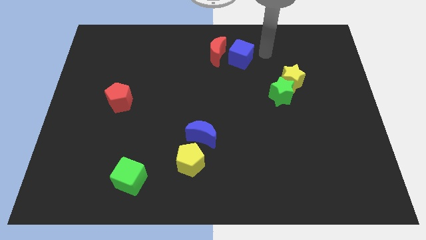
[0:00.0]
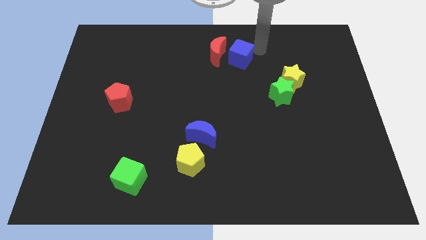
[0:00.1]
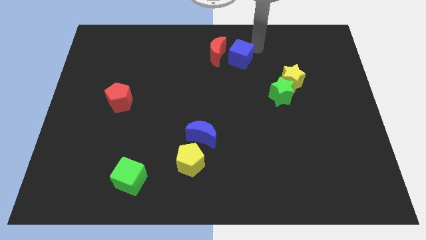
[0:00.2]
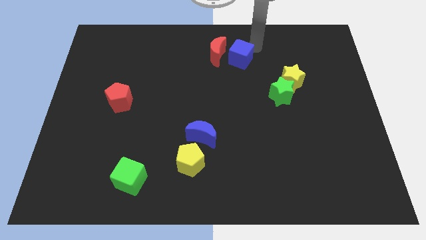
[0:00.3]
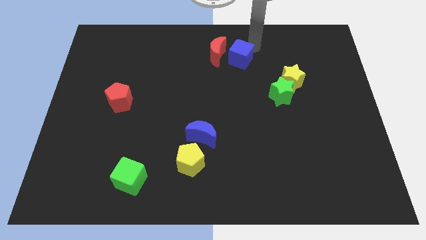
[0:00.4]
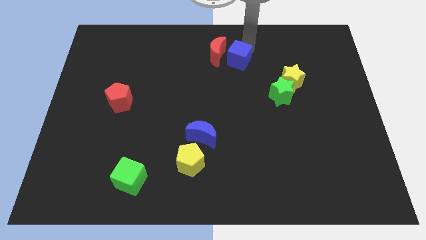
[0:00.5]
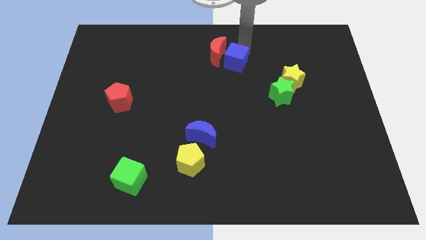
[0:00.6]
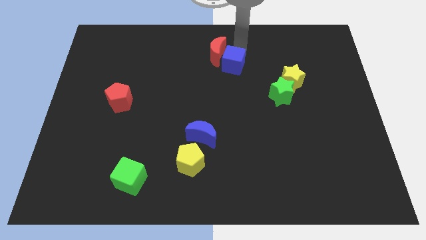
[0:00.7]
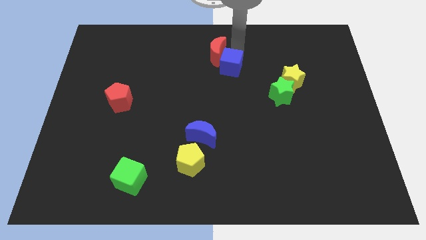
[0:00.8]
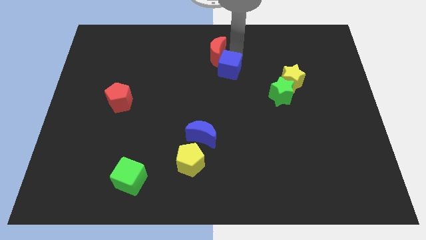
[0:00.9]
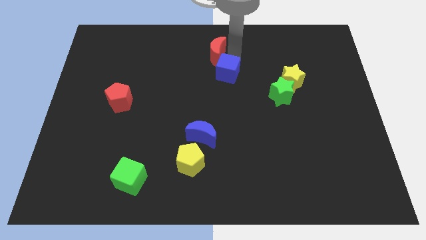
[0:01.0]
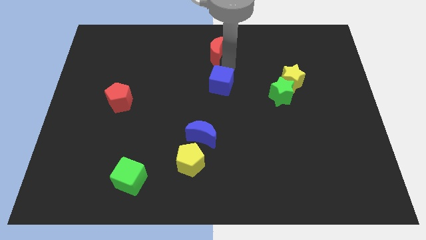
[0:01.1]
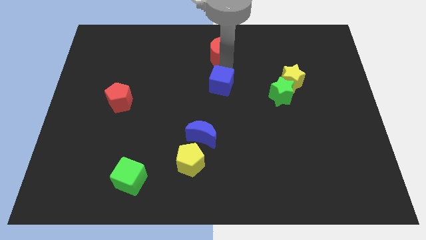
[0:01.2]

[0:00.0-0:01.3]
place the blue cube below the red moon

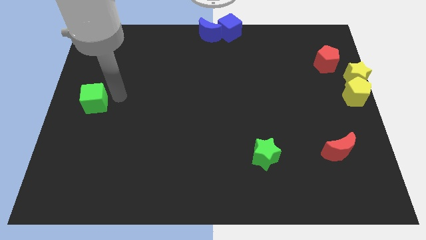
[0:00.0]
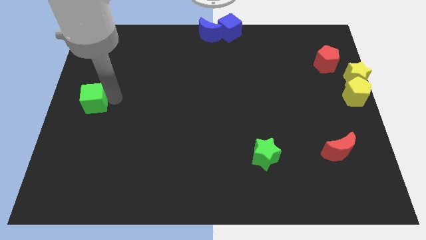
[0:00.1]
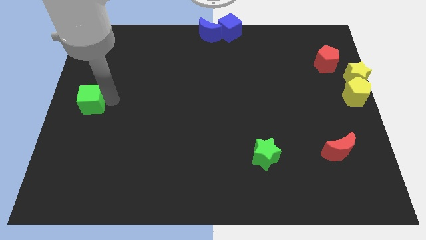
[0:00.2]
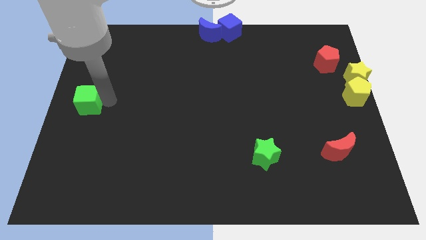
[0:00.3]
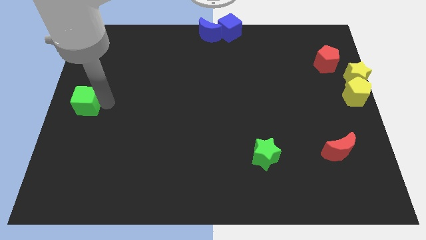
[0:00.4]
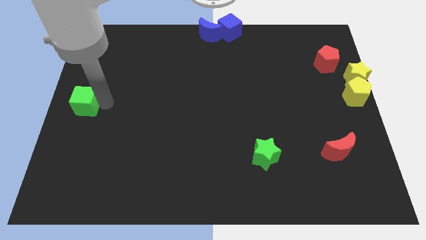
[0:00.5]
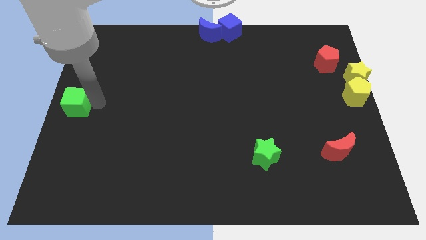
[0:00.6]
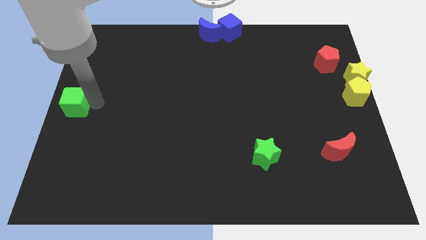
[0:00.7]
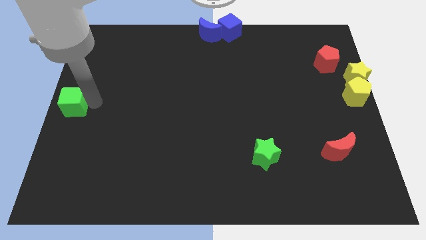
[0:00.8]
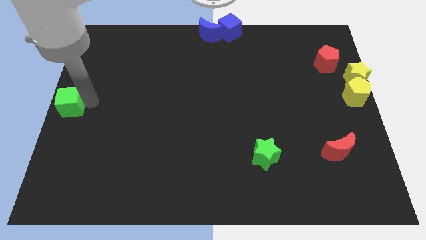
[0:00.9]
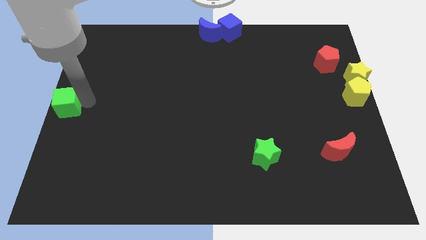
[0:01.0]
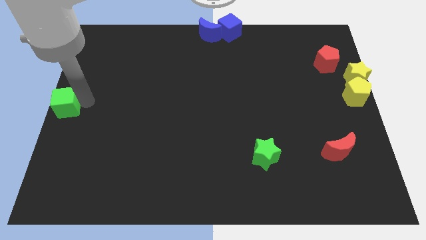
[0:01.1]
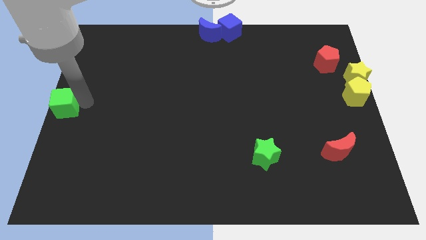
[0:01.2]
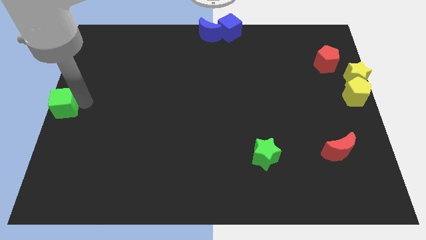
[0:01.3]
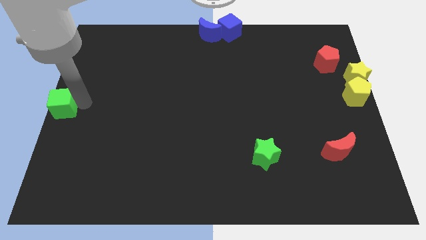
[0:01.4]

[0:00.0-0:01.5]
move the green cube to the left middle of the board

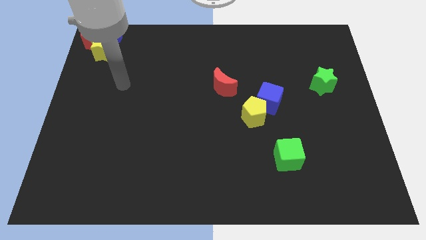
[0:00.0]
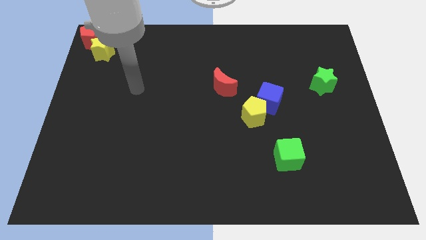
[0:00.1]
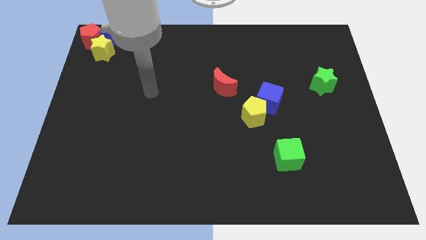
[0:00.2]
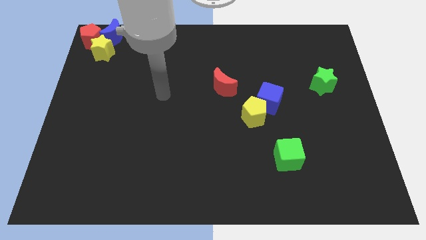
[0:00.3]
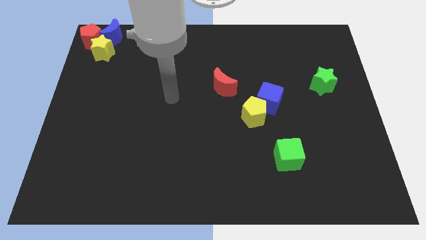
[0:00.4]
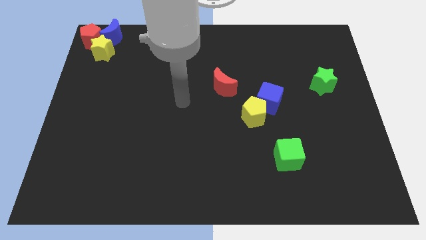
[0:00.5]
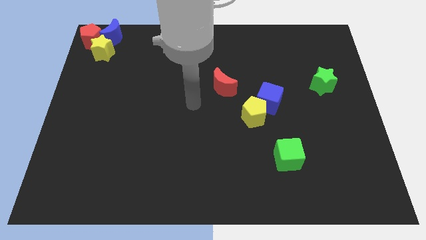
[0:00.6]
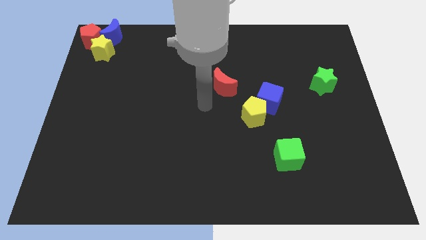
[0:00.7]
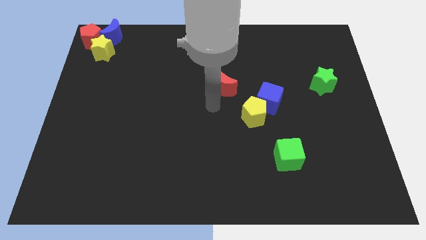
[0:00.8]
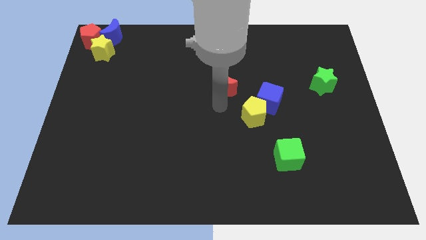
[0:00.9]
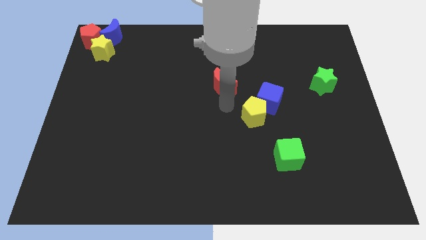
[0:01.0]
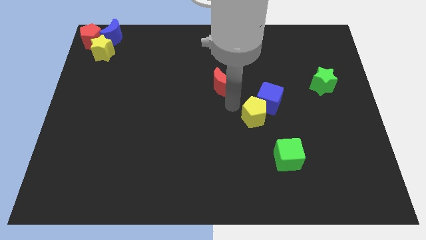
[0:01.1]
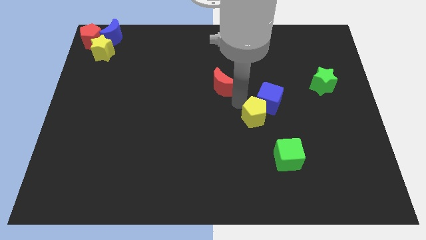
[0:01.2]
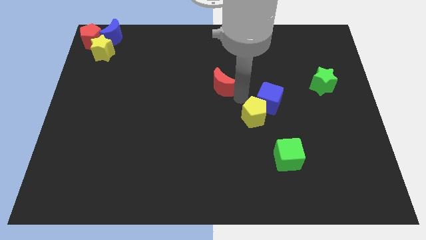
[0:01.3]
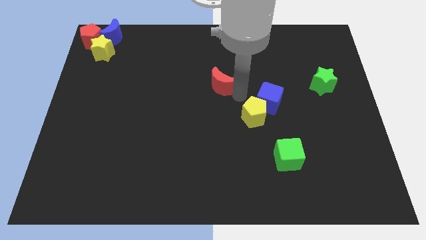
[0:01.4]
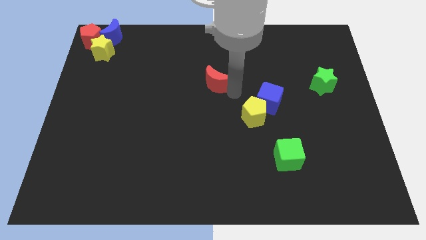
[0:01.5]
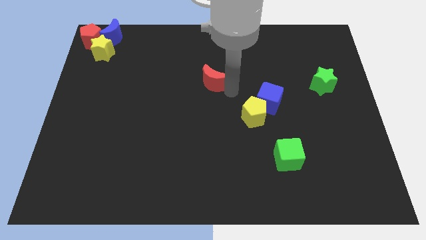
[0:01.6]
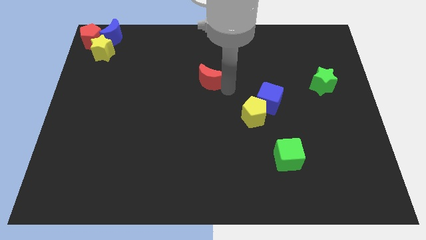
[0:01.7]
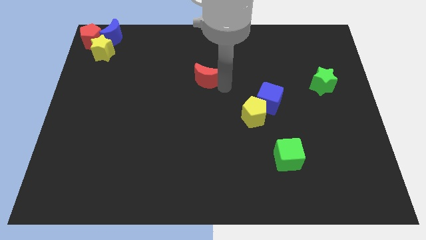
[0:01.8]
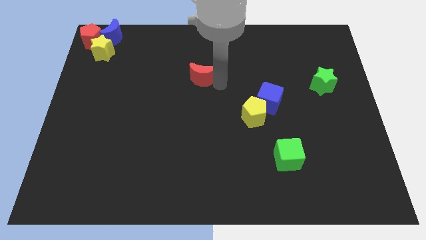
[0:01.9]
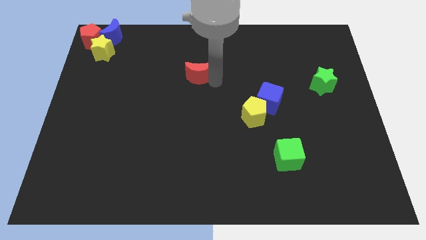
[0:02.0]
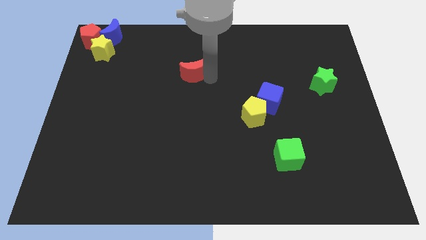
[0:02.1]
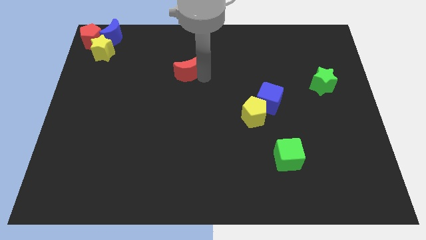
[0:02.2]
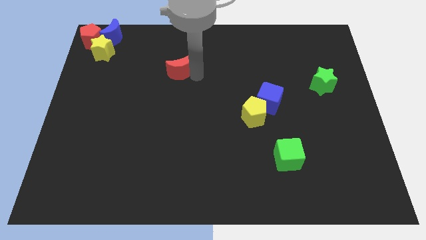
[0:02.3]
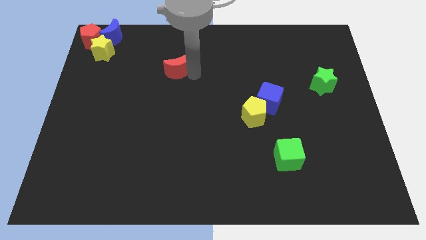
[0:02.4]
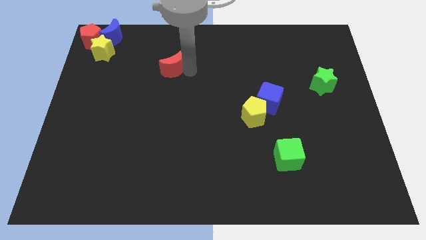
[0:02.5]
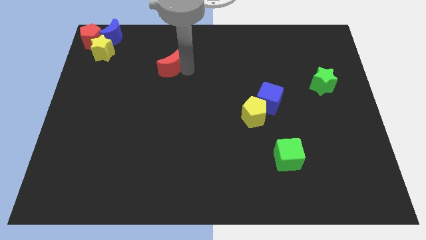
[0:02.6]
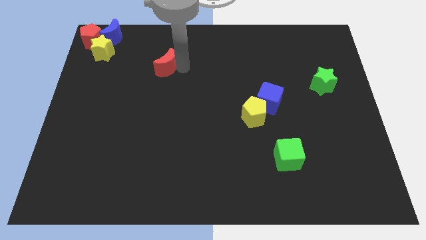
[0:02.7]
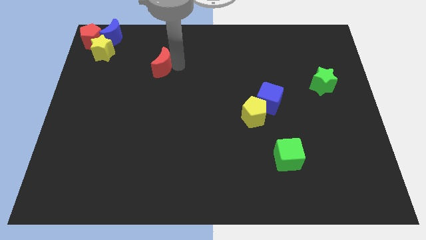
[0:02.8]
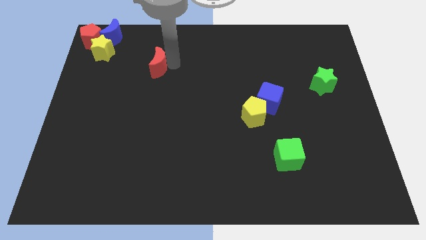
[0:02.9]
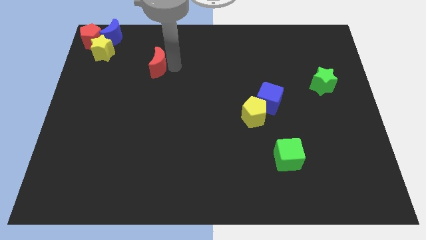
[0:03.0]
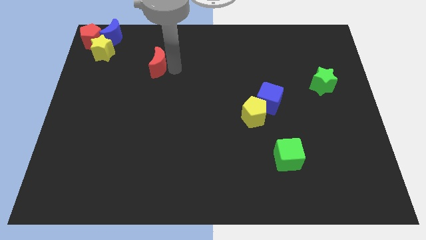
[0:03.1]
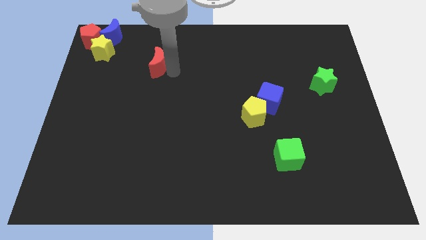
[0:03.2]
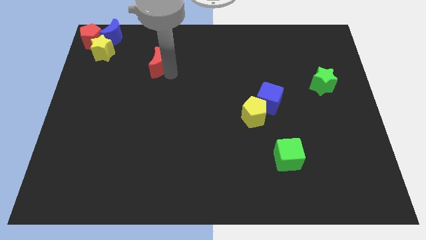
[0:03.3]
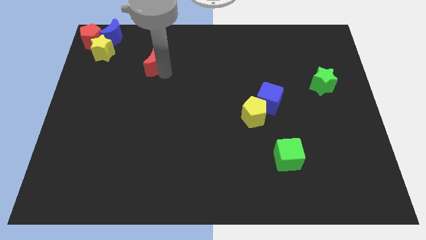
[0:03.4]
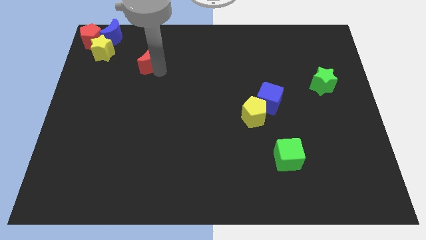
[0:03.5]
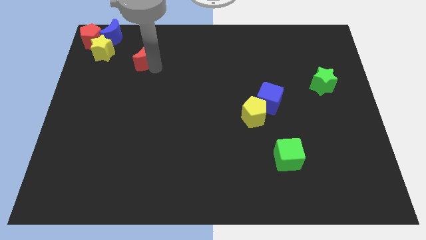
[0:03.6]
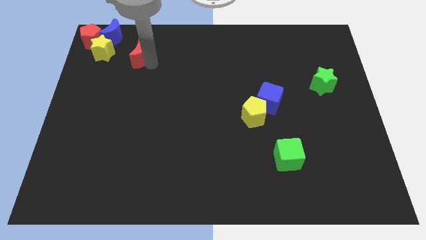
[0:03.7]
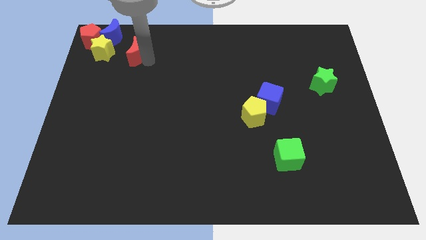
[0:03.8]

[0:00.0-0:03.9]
place red moon to the right of yellow star

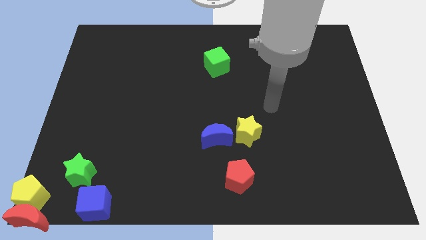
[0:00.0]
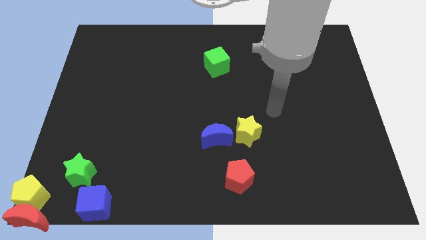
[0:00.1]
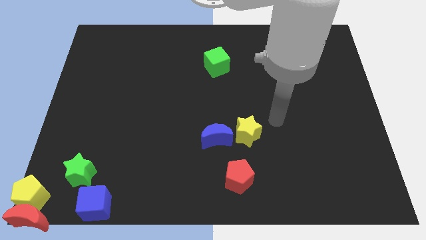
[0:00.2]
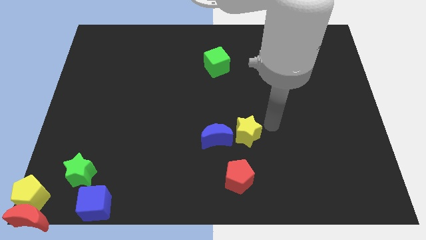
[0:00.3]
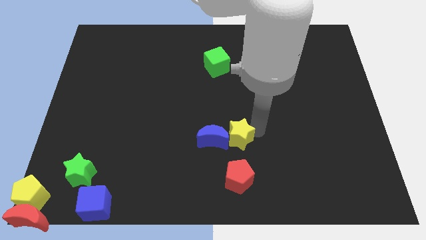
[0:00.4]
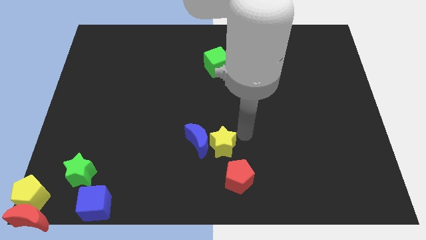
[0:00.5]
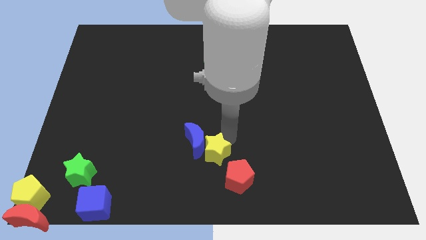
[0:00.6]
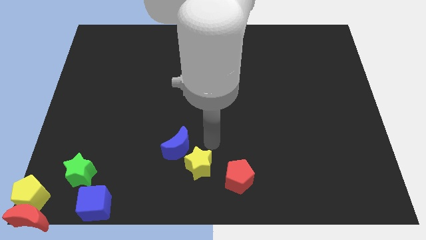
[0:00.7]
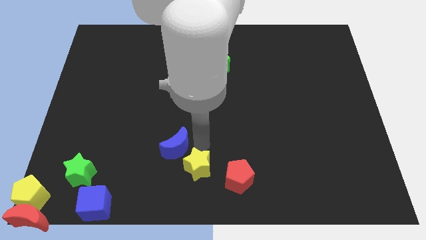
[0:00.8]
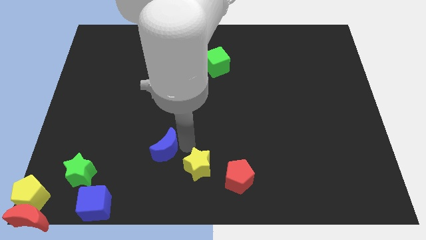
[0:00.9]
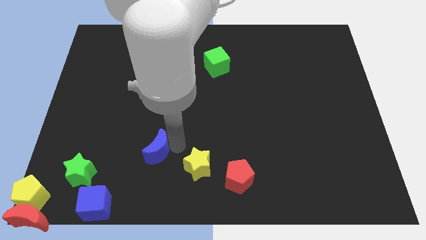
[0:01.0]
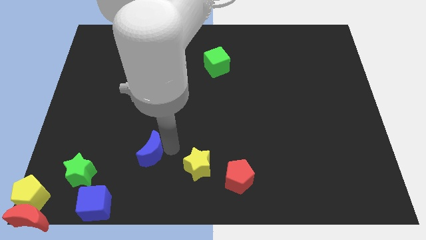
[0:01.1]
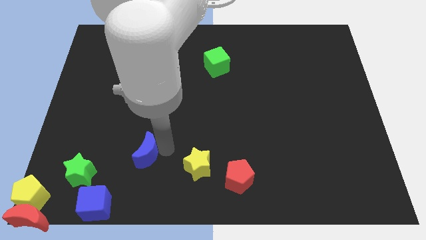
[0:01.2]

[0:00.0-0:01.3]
slide the blue moon diagonally on the top left side of the yellow star

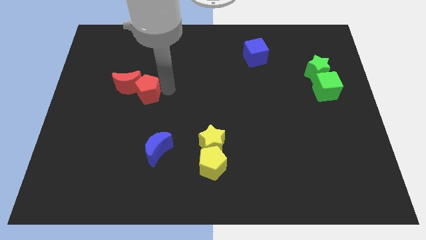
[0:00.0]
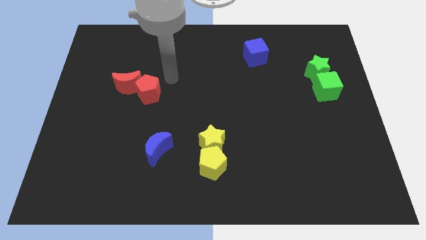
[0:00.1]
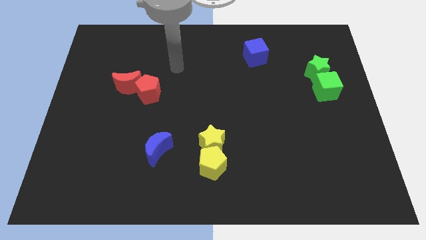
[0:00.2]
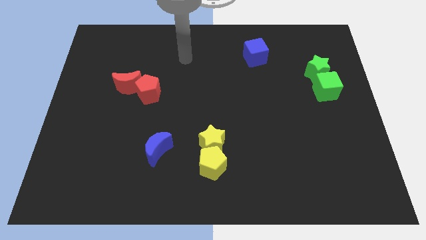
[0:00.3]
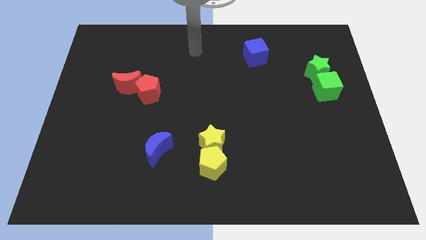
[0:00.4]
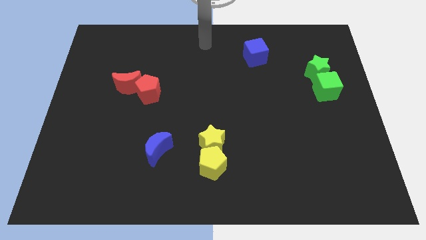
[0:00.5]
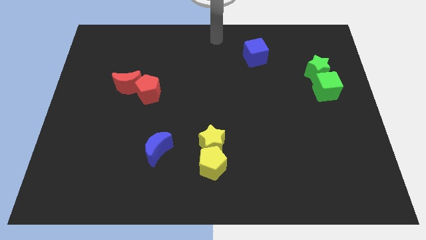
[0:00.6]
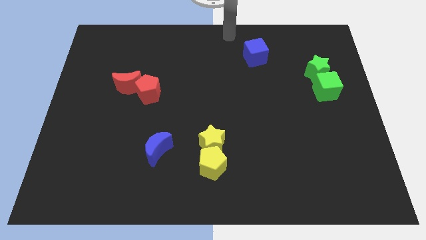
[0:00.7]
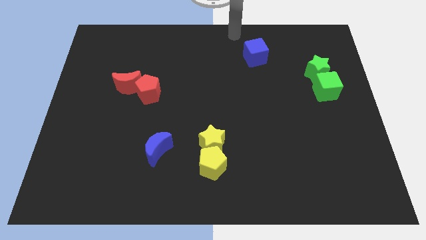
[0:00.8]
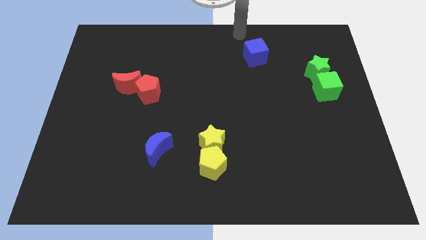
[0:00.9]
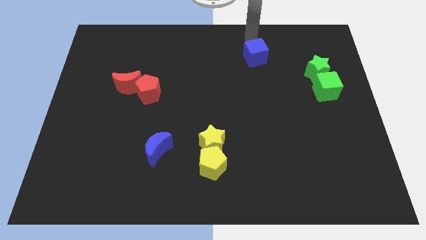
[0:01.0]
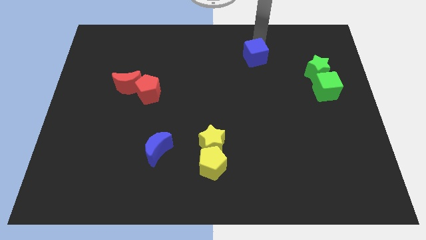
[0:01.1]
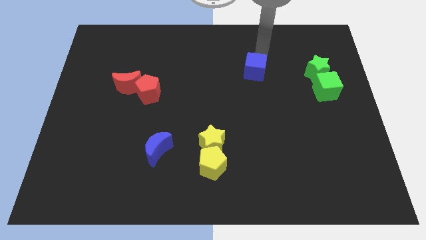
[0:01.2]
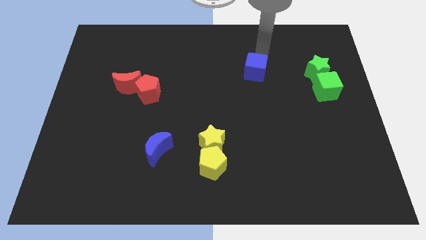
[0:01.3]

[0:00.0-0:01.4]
slightly move blue cube to the center
